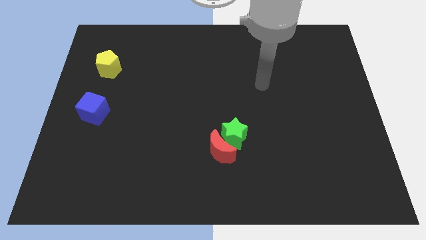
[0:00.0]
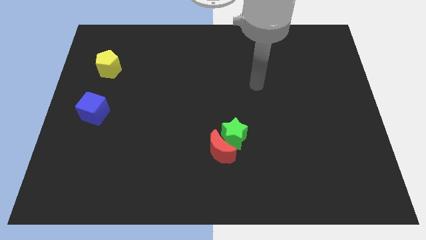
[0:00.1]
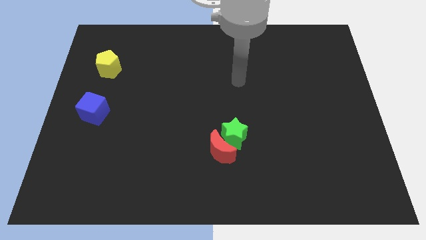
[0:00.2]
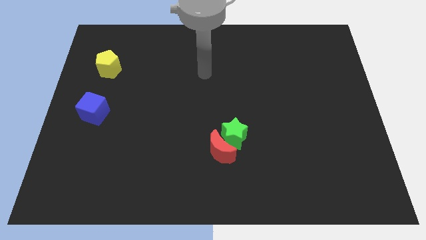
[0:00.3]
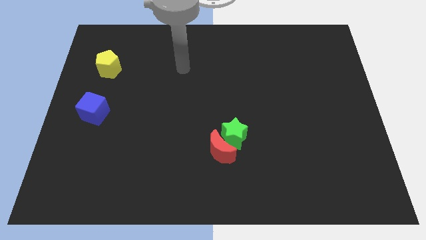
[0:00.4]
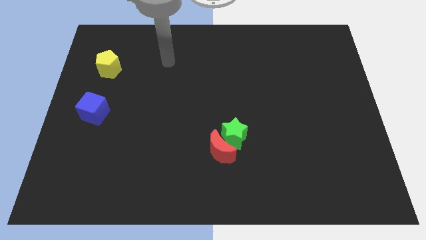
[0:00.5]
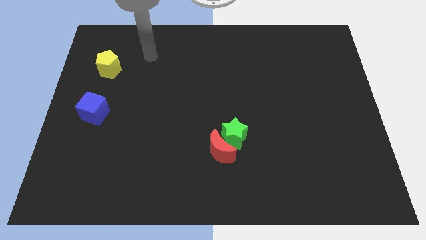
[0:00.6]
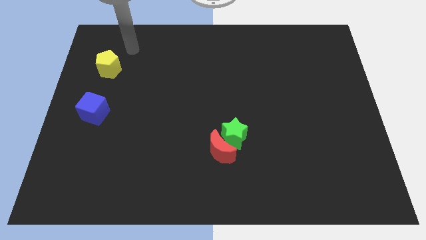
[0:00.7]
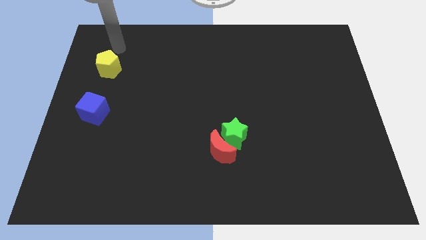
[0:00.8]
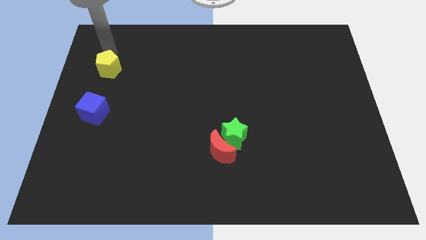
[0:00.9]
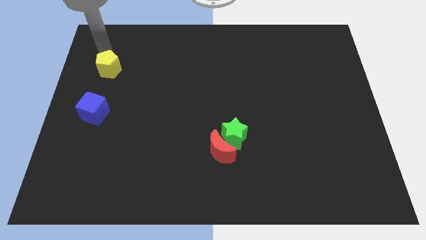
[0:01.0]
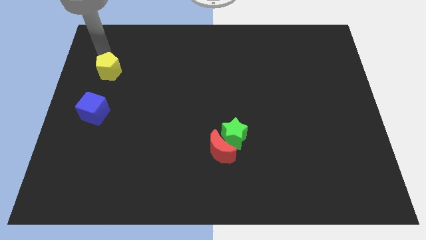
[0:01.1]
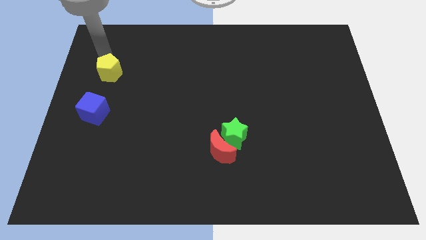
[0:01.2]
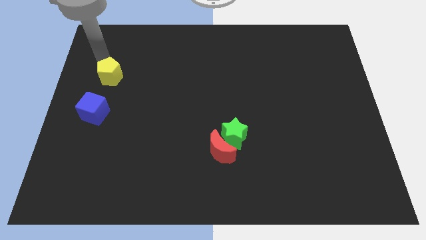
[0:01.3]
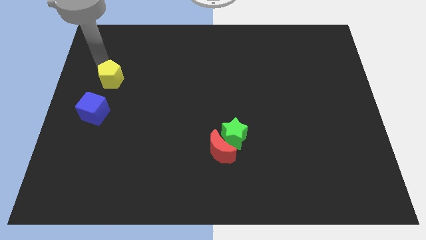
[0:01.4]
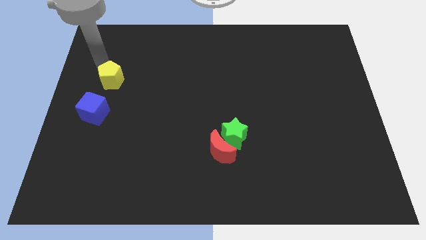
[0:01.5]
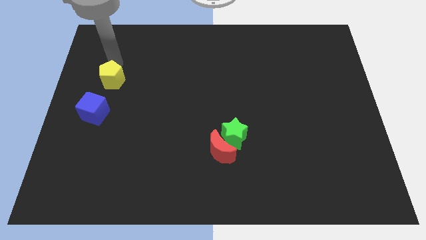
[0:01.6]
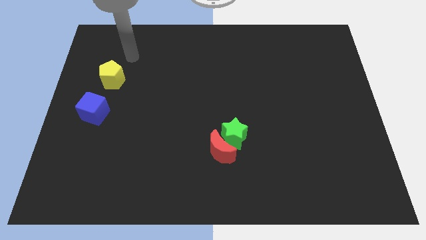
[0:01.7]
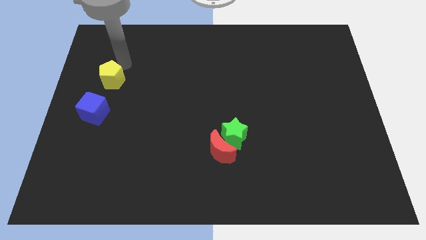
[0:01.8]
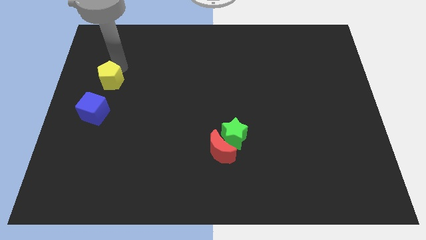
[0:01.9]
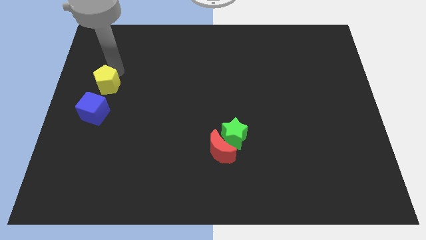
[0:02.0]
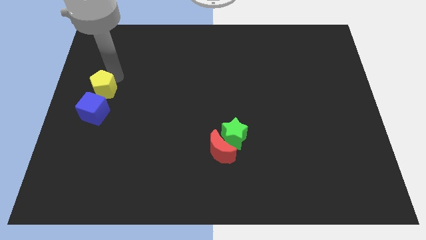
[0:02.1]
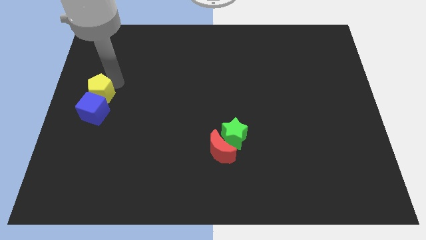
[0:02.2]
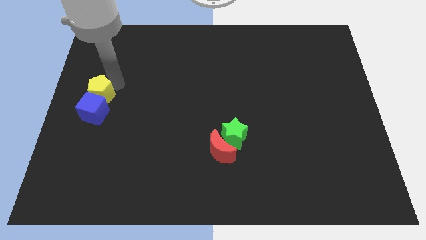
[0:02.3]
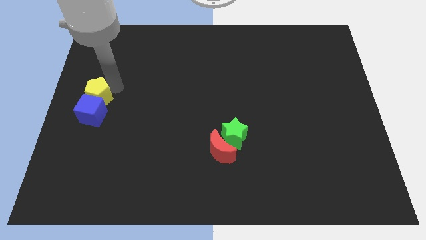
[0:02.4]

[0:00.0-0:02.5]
put the yellow pentagon next to the blue cube

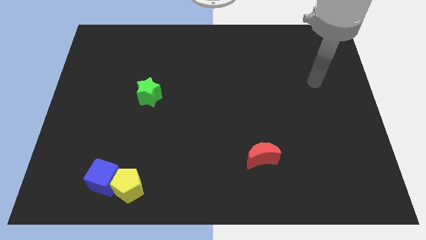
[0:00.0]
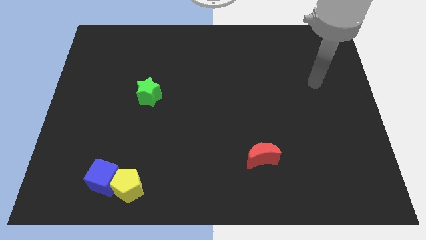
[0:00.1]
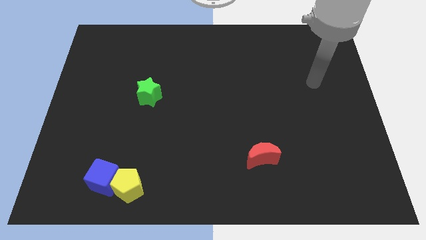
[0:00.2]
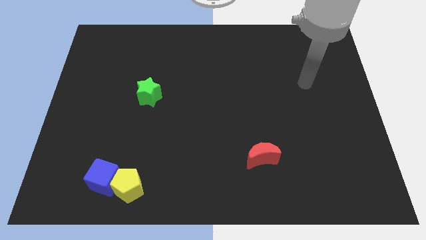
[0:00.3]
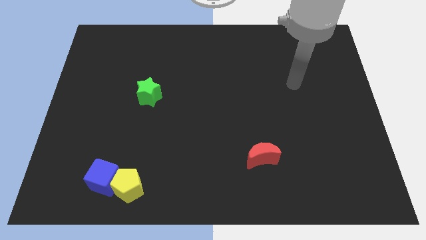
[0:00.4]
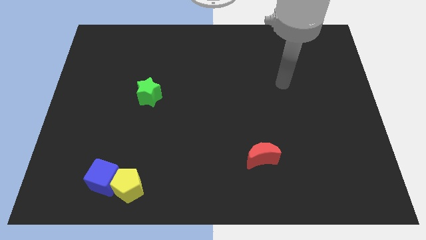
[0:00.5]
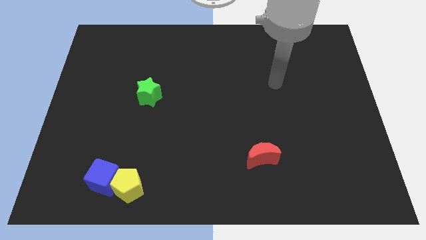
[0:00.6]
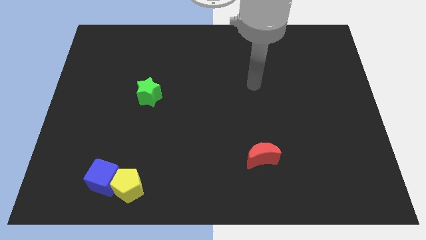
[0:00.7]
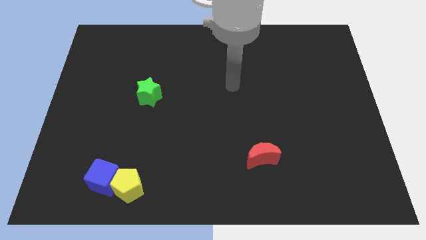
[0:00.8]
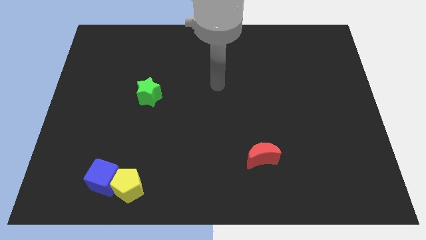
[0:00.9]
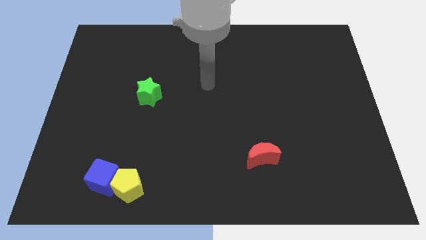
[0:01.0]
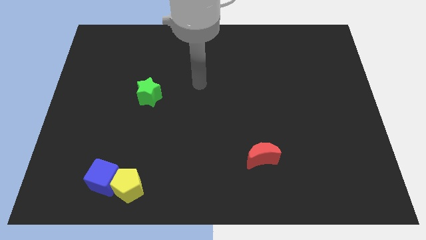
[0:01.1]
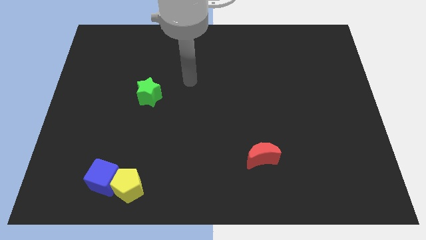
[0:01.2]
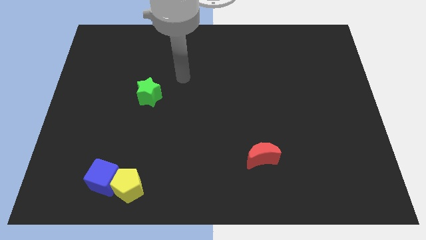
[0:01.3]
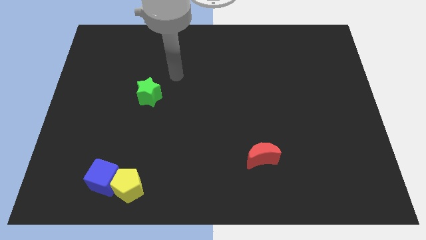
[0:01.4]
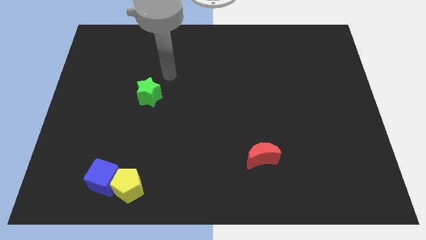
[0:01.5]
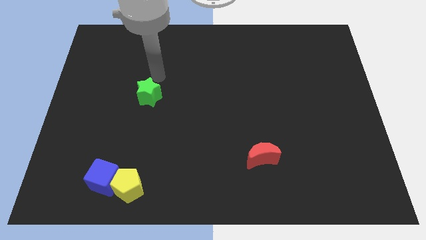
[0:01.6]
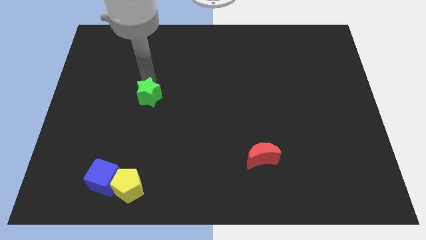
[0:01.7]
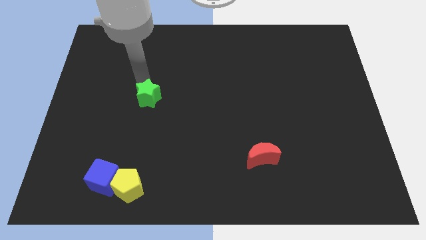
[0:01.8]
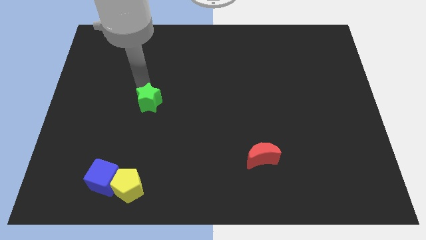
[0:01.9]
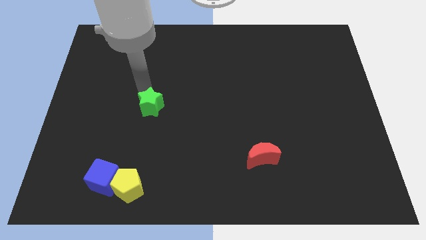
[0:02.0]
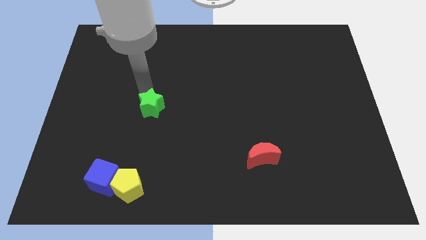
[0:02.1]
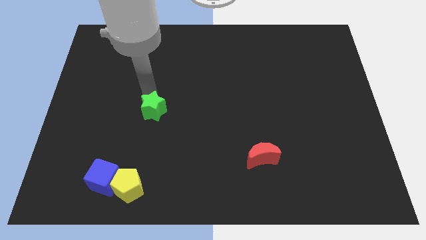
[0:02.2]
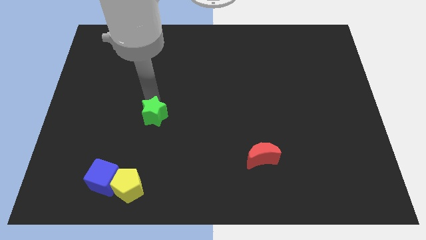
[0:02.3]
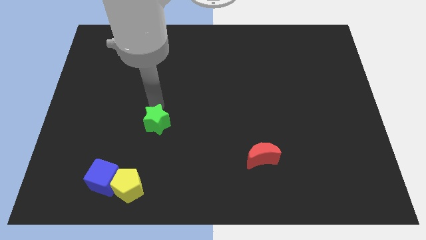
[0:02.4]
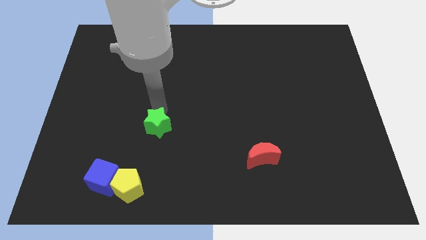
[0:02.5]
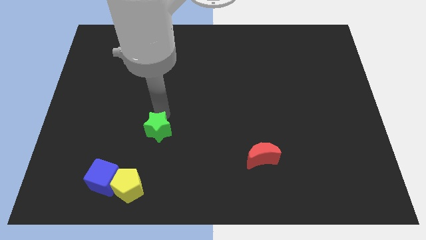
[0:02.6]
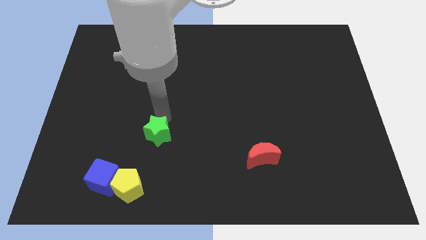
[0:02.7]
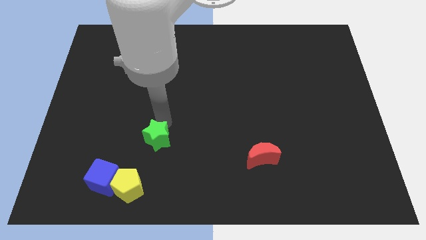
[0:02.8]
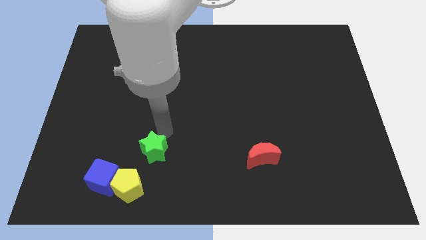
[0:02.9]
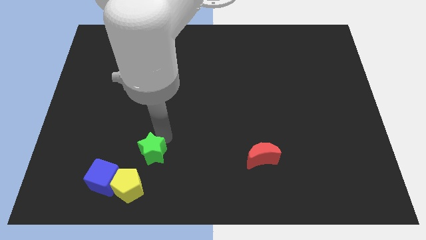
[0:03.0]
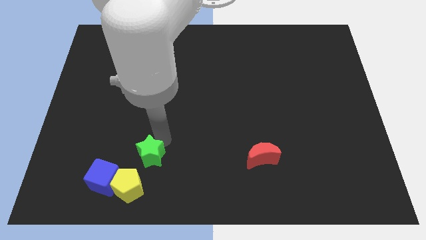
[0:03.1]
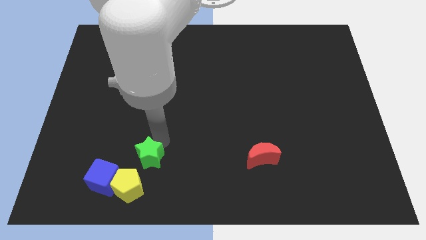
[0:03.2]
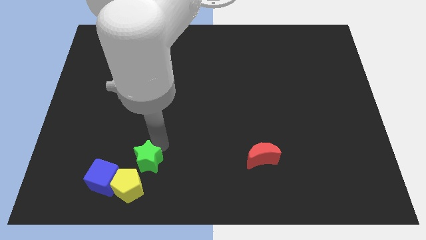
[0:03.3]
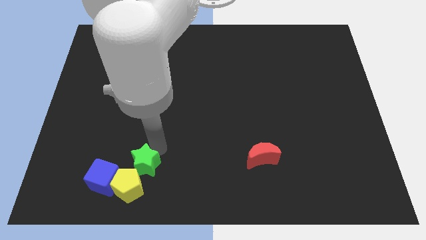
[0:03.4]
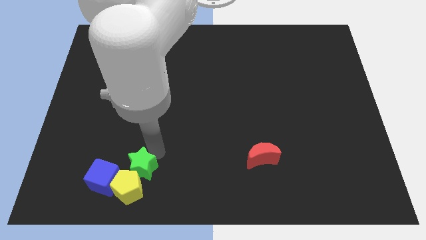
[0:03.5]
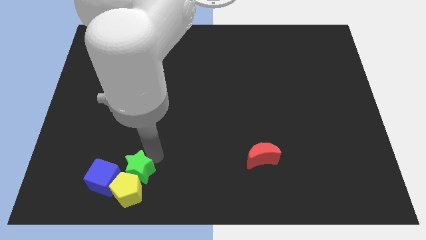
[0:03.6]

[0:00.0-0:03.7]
put the green star to the yellow pentagon

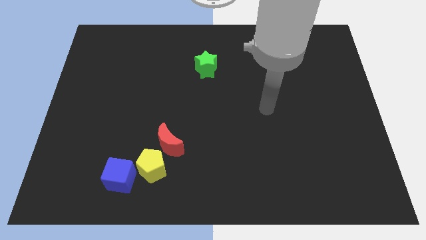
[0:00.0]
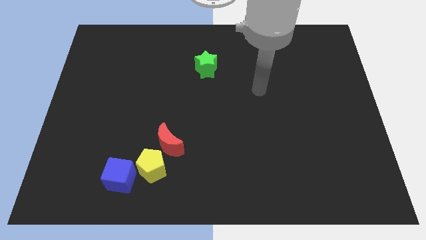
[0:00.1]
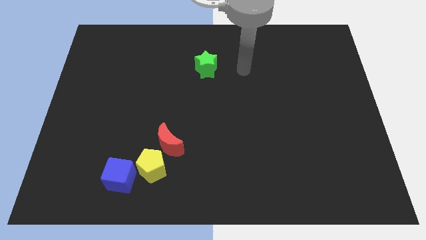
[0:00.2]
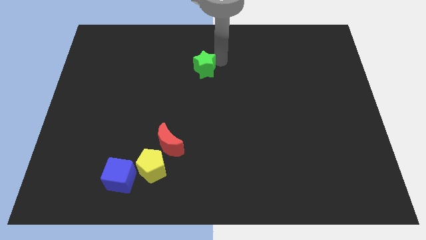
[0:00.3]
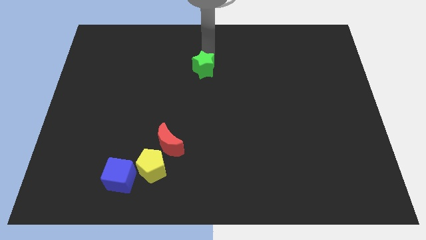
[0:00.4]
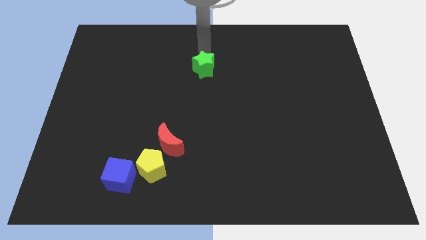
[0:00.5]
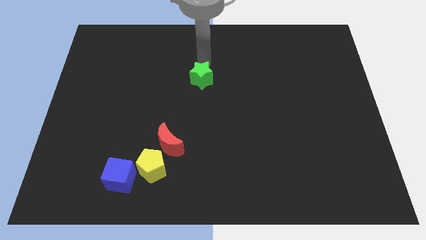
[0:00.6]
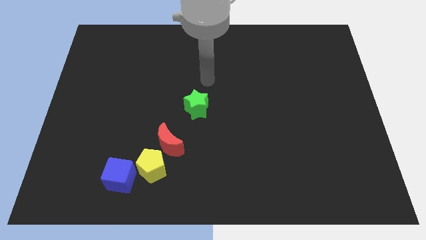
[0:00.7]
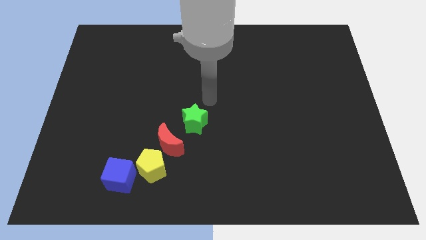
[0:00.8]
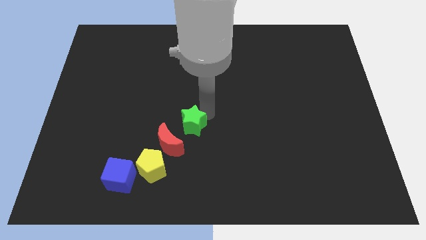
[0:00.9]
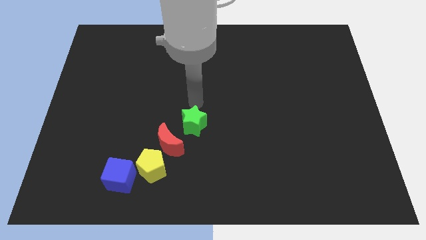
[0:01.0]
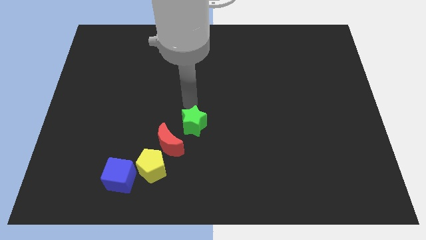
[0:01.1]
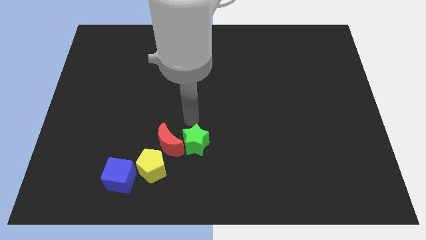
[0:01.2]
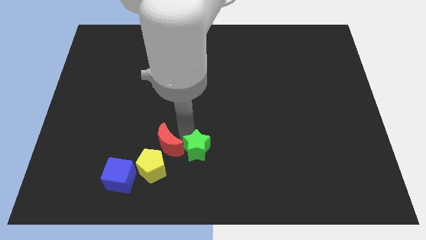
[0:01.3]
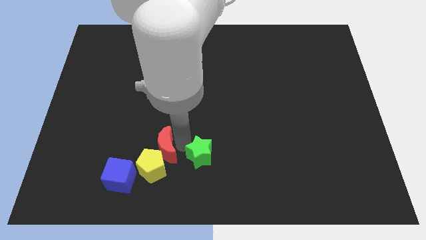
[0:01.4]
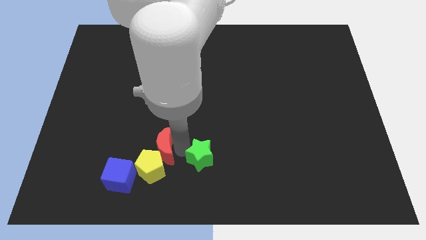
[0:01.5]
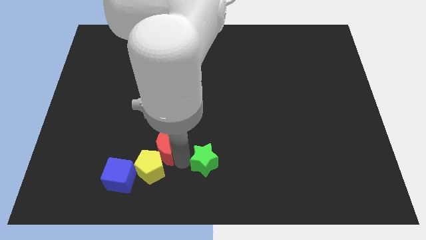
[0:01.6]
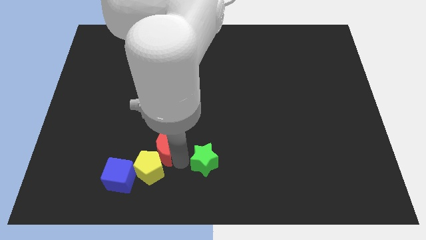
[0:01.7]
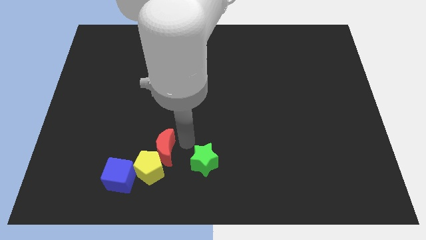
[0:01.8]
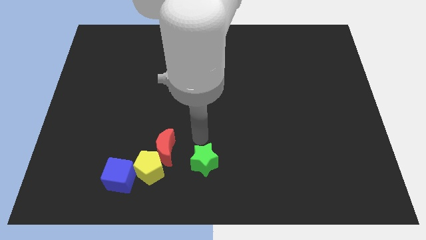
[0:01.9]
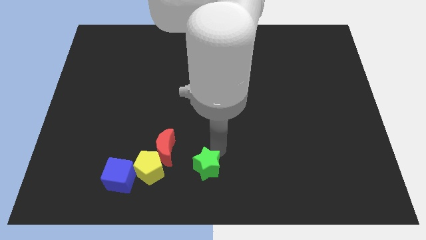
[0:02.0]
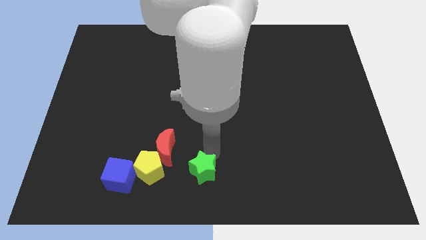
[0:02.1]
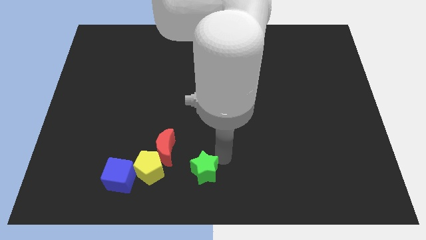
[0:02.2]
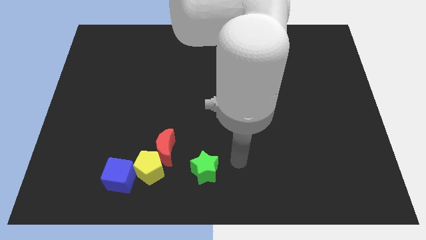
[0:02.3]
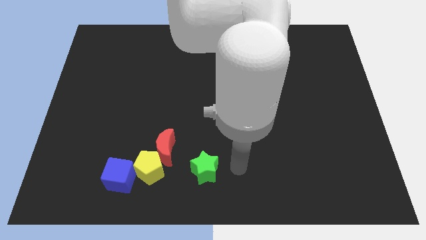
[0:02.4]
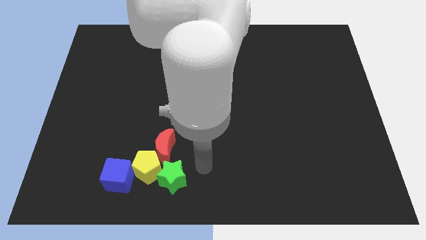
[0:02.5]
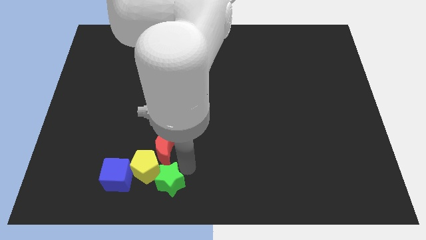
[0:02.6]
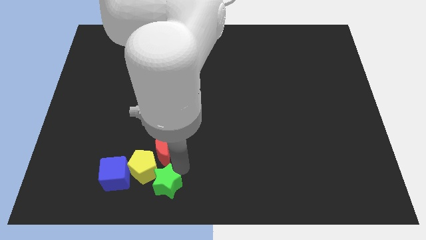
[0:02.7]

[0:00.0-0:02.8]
put the star next to the yellow block
